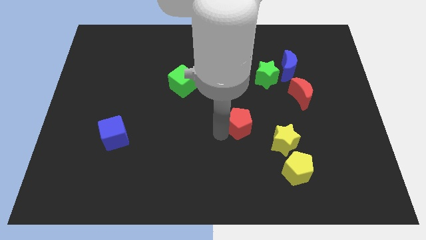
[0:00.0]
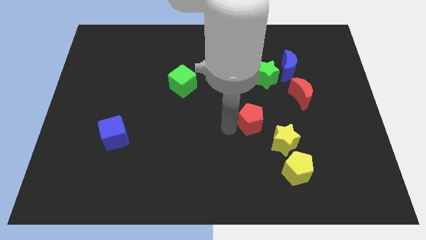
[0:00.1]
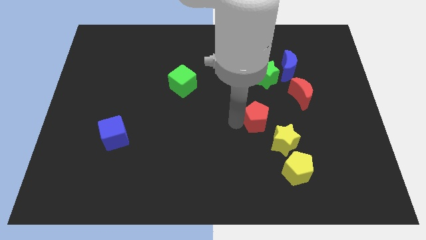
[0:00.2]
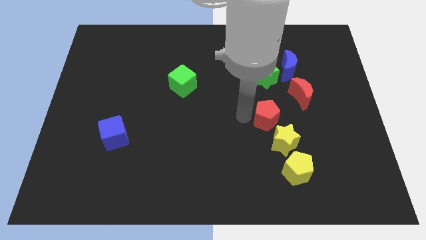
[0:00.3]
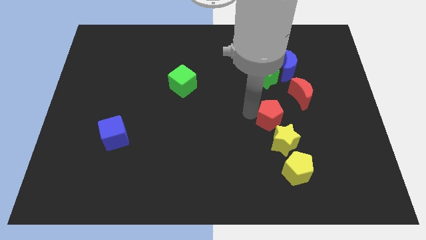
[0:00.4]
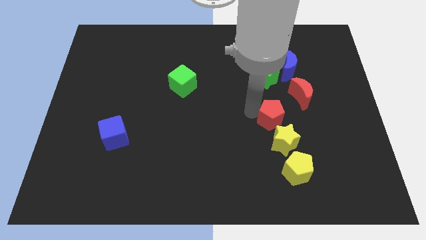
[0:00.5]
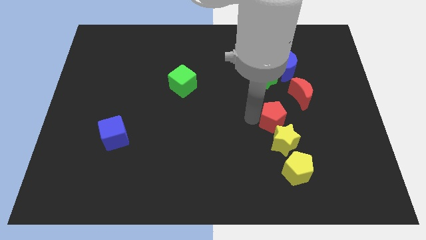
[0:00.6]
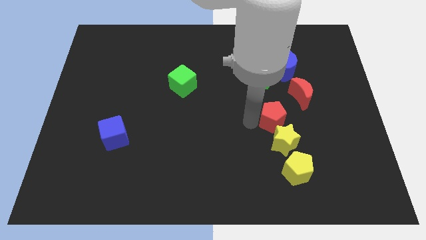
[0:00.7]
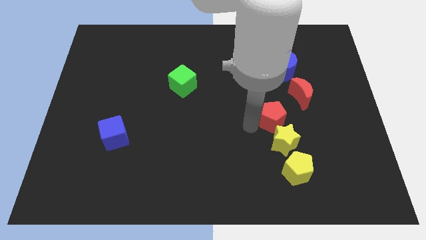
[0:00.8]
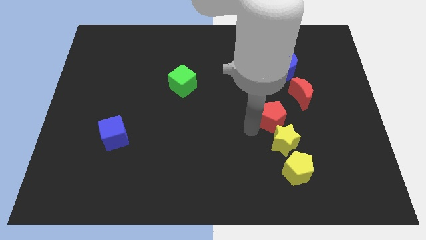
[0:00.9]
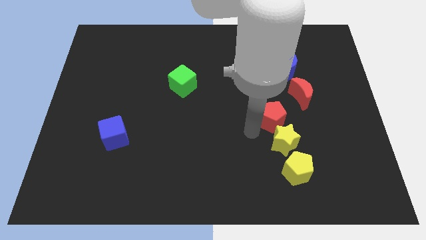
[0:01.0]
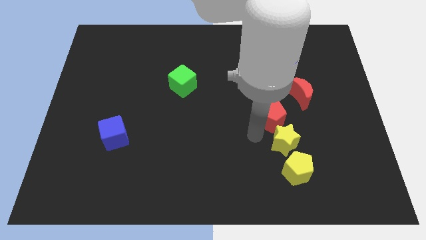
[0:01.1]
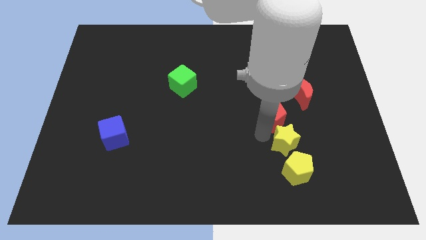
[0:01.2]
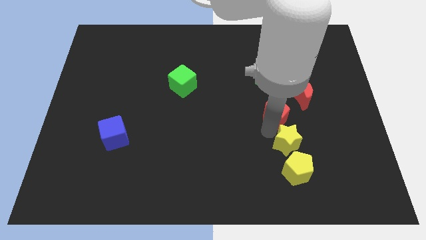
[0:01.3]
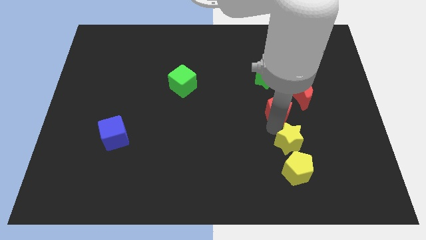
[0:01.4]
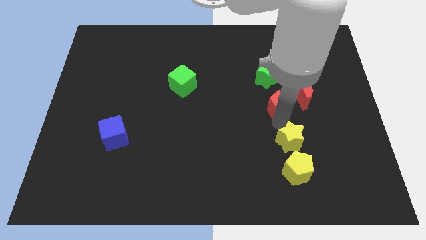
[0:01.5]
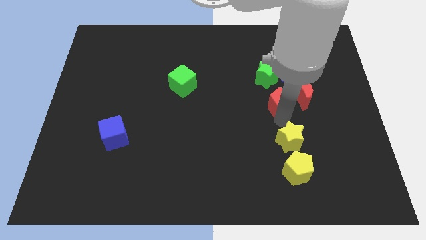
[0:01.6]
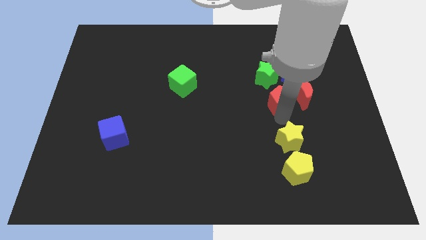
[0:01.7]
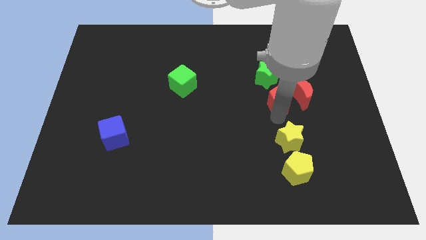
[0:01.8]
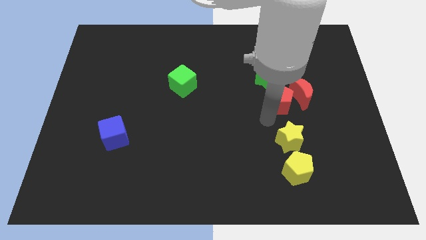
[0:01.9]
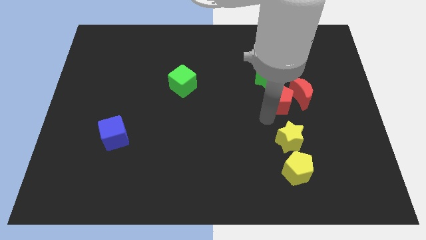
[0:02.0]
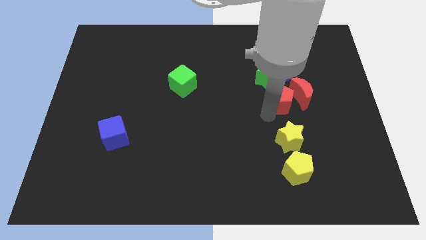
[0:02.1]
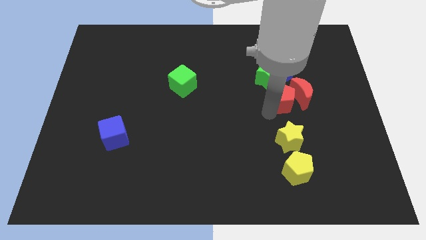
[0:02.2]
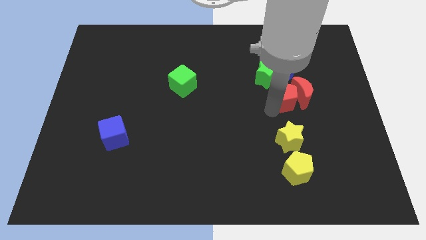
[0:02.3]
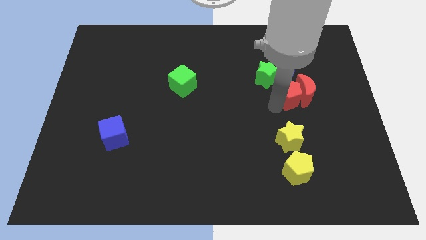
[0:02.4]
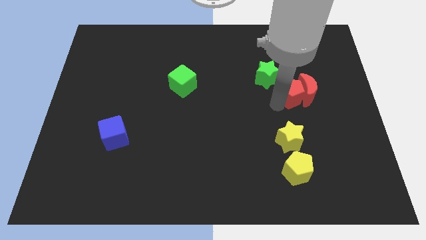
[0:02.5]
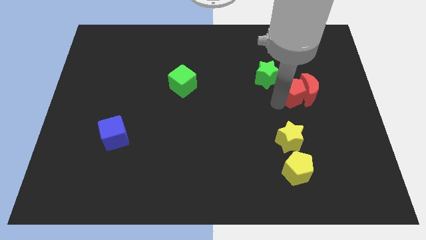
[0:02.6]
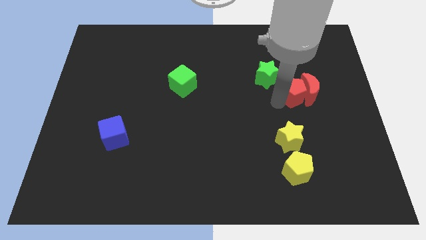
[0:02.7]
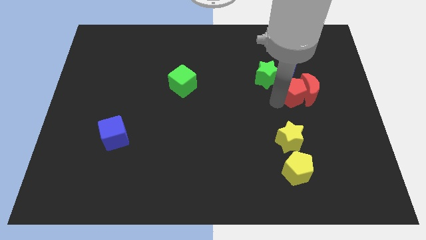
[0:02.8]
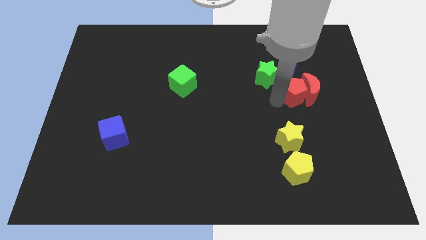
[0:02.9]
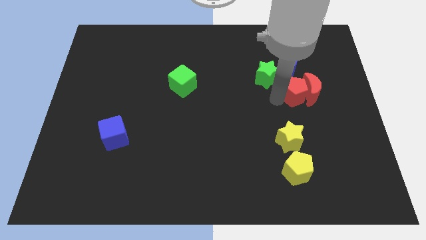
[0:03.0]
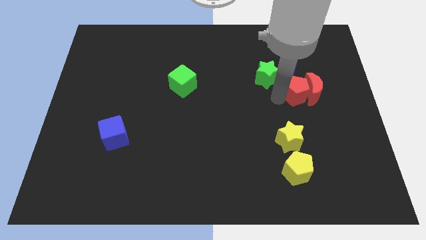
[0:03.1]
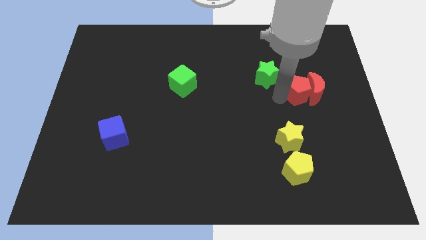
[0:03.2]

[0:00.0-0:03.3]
move the red pentagon into the red moon

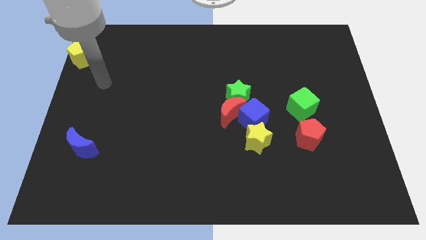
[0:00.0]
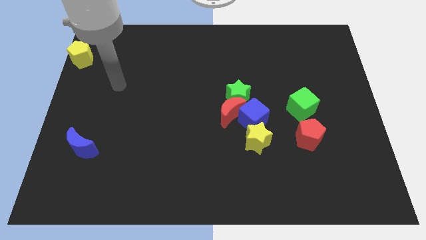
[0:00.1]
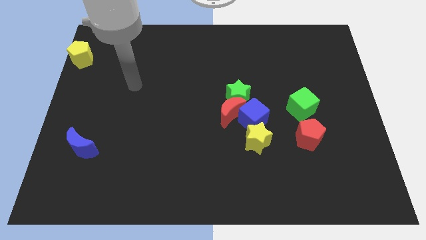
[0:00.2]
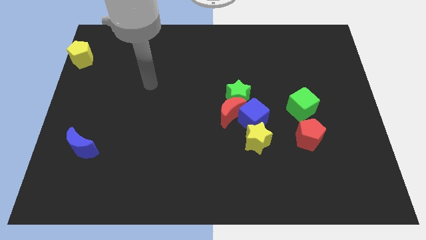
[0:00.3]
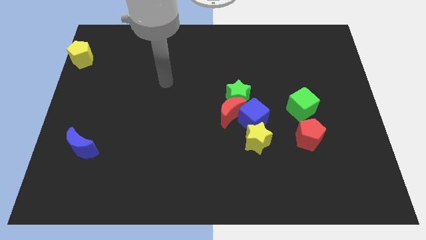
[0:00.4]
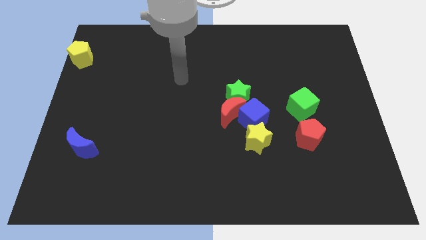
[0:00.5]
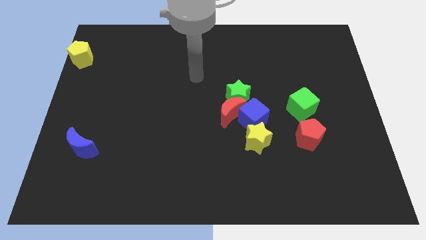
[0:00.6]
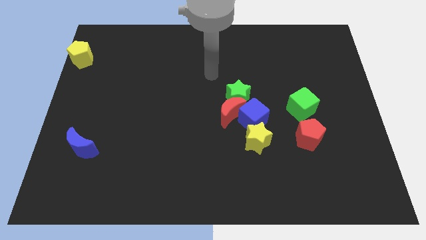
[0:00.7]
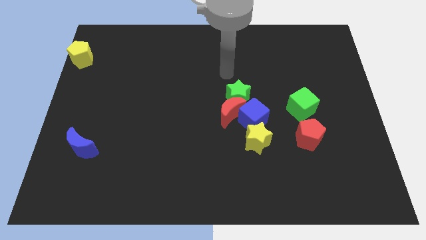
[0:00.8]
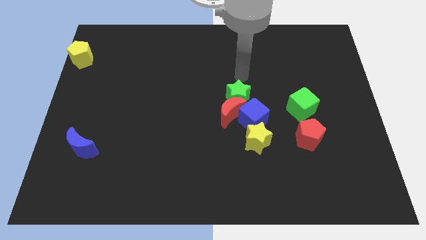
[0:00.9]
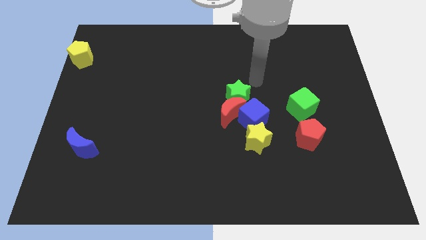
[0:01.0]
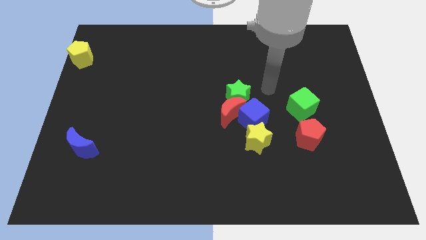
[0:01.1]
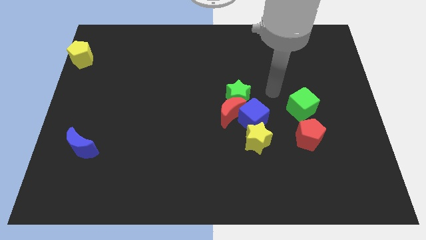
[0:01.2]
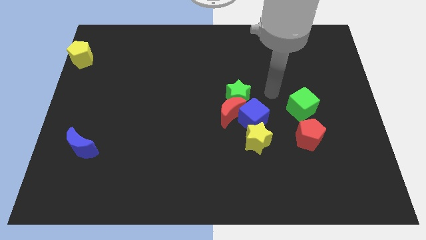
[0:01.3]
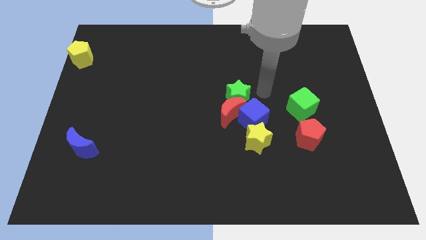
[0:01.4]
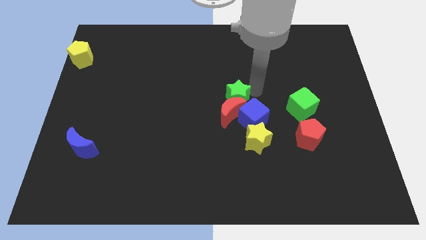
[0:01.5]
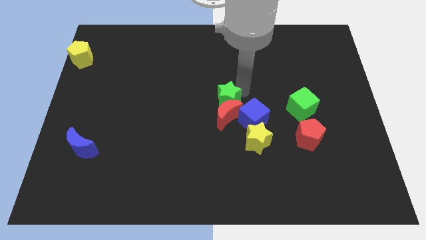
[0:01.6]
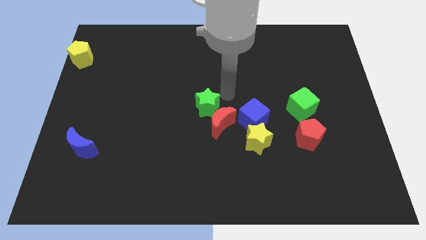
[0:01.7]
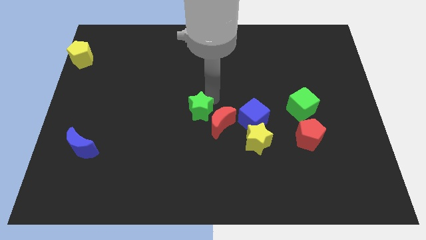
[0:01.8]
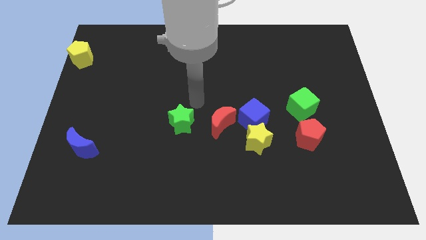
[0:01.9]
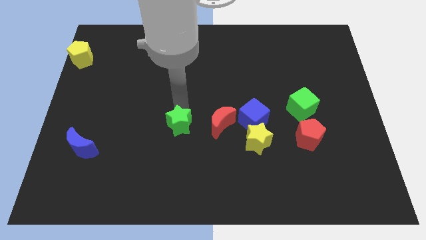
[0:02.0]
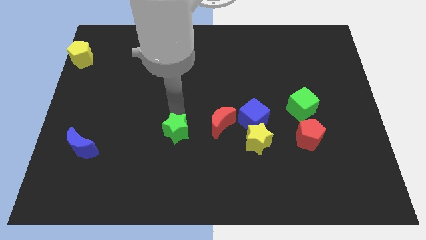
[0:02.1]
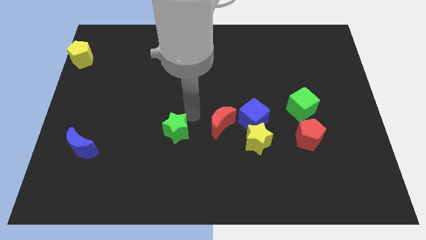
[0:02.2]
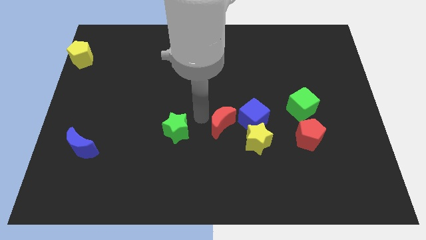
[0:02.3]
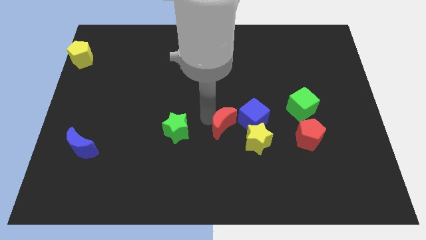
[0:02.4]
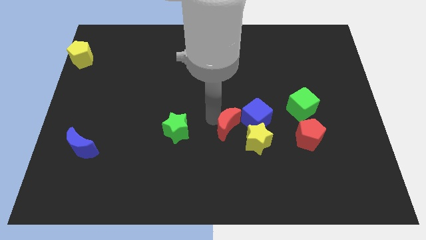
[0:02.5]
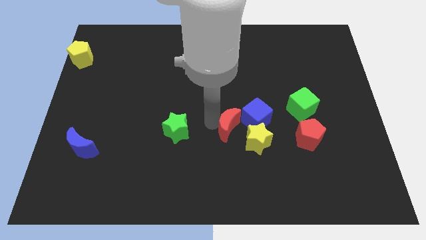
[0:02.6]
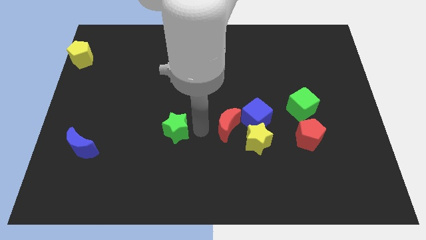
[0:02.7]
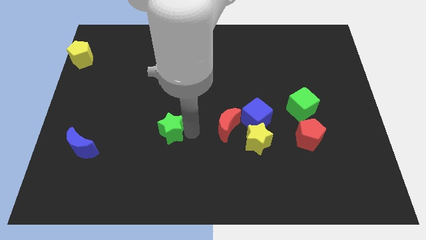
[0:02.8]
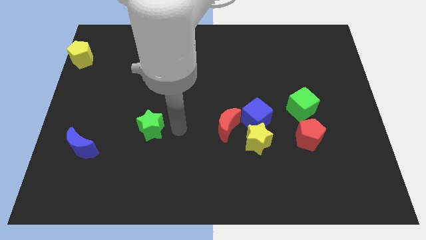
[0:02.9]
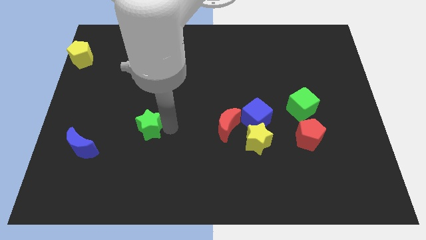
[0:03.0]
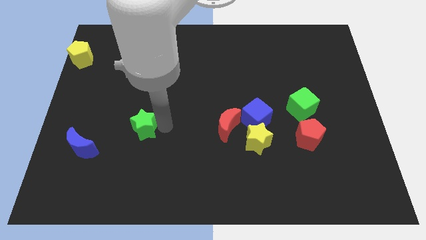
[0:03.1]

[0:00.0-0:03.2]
push the green star towards the blue cube

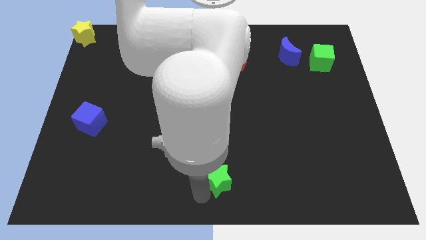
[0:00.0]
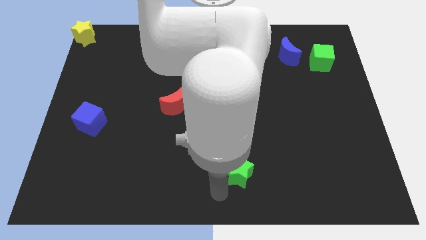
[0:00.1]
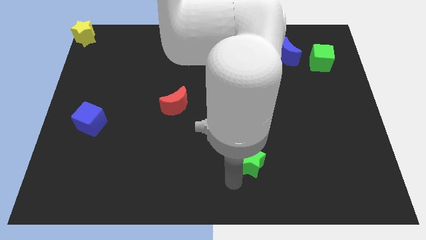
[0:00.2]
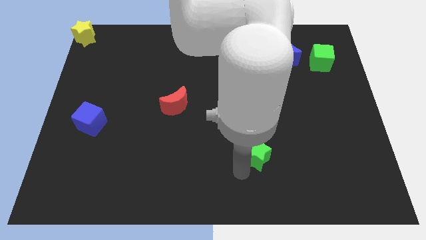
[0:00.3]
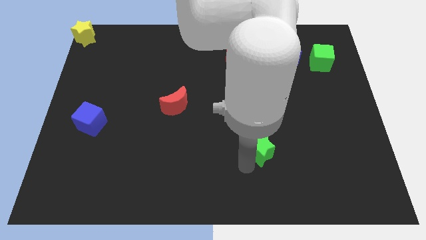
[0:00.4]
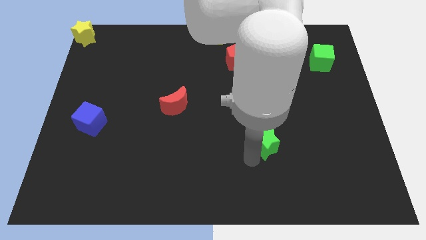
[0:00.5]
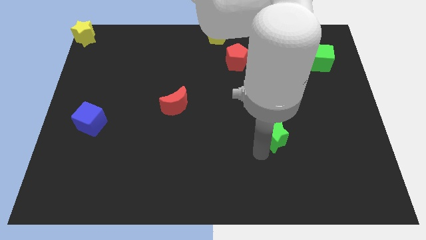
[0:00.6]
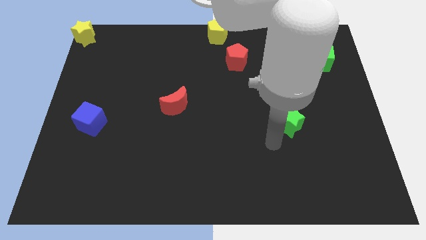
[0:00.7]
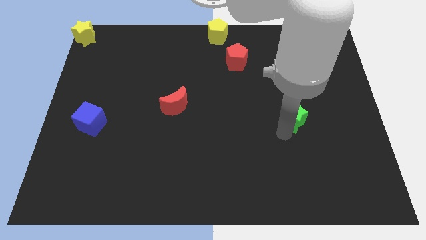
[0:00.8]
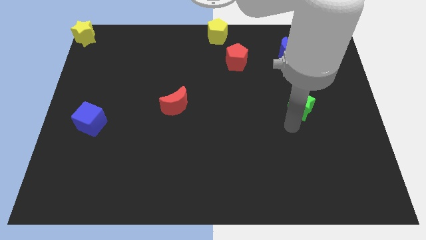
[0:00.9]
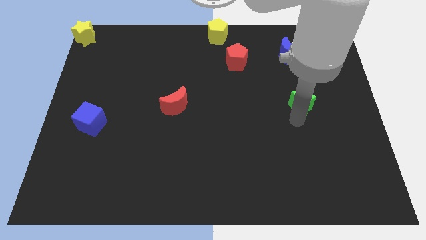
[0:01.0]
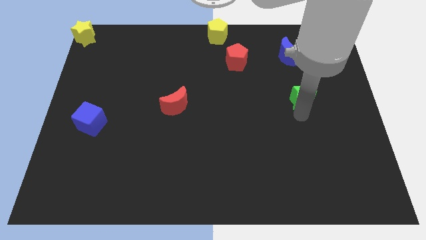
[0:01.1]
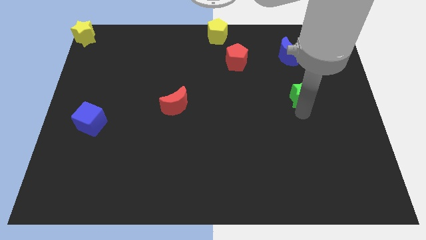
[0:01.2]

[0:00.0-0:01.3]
move the green star towards the green cube

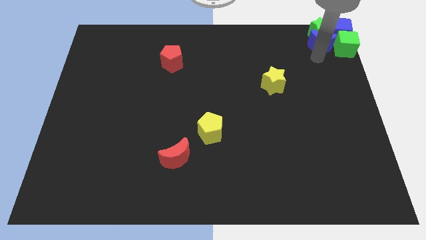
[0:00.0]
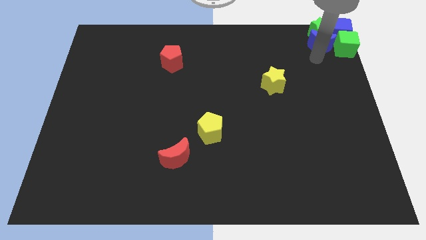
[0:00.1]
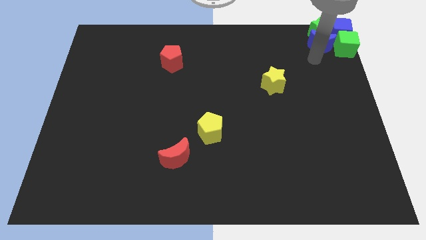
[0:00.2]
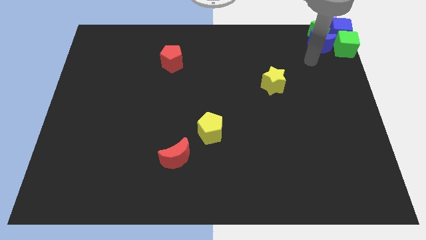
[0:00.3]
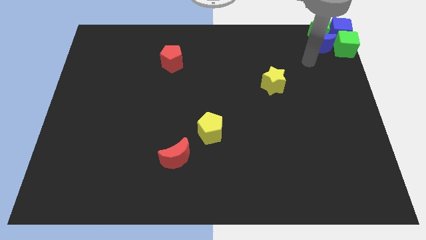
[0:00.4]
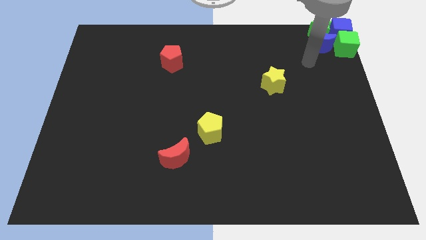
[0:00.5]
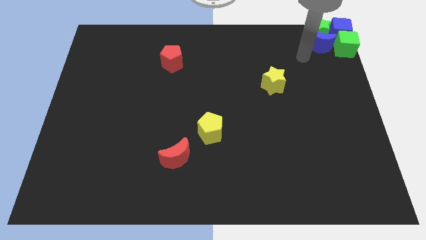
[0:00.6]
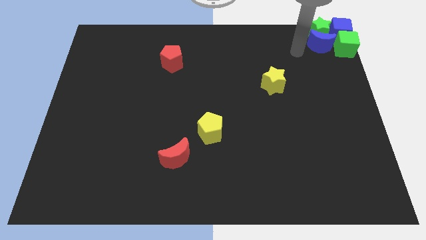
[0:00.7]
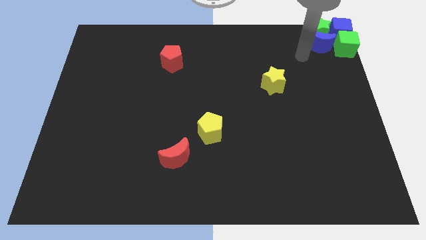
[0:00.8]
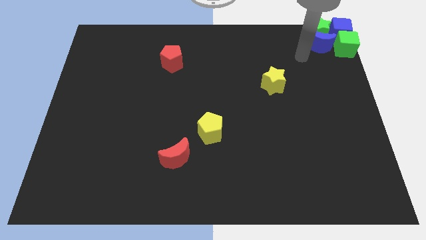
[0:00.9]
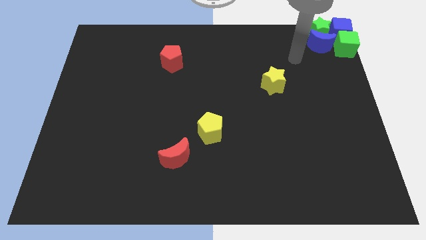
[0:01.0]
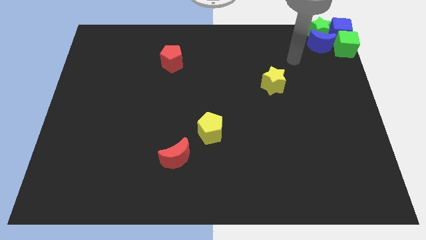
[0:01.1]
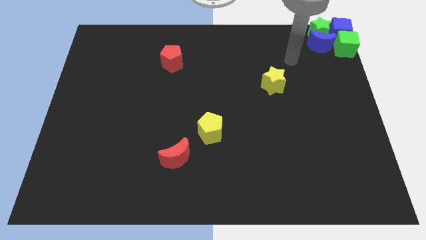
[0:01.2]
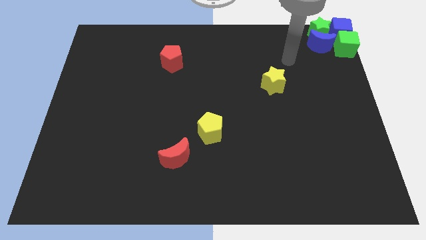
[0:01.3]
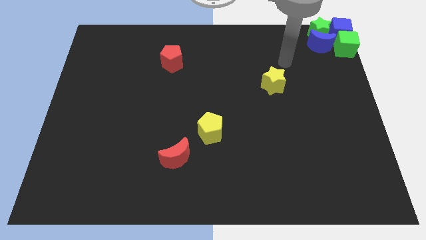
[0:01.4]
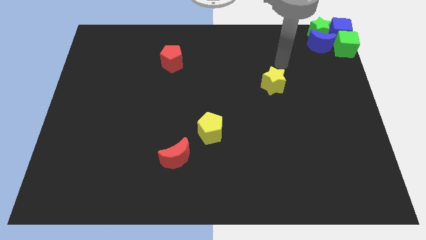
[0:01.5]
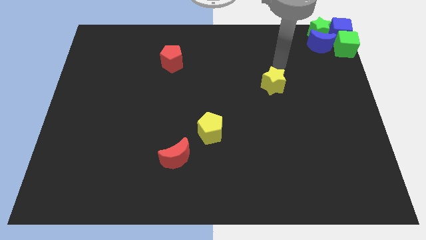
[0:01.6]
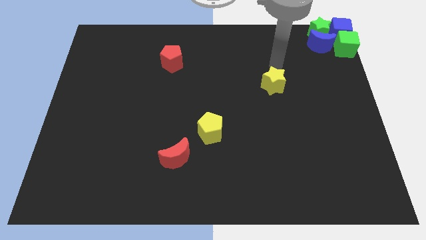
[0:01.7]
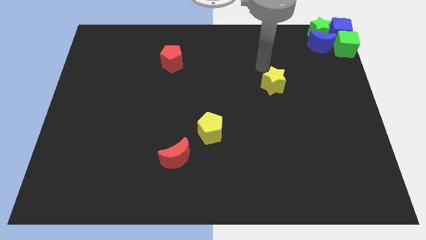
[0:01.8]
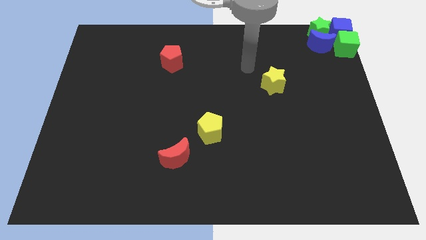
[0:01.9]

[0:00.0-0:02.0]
place your arm to the top left side of the yellow star
